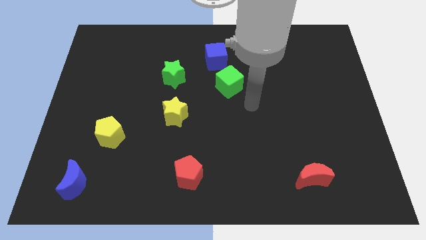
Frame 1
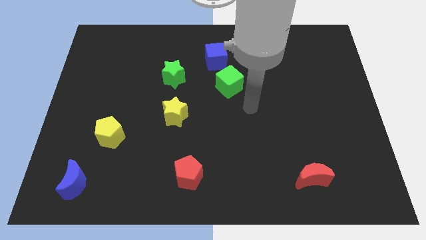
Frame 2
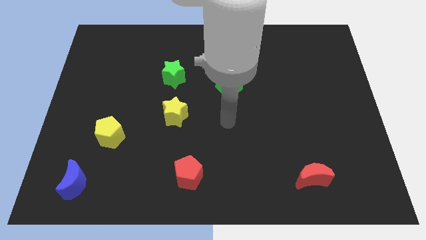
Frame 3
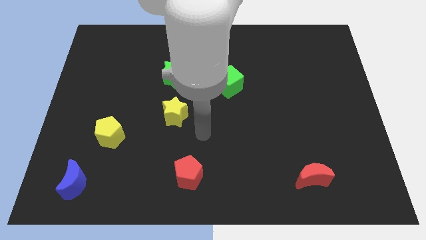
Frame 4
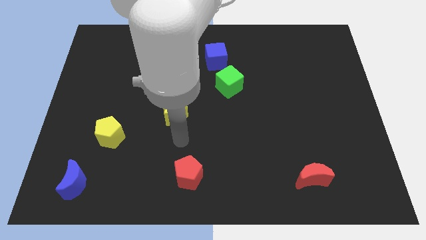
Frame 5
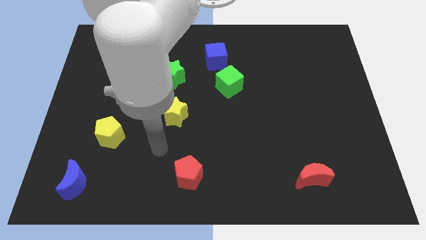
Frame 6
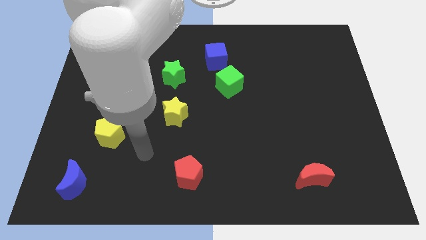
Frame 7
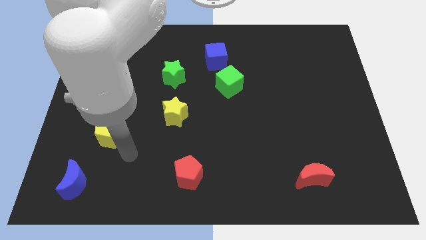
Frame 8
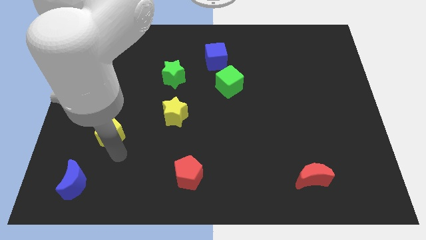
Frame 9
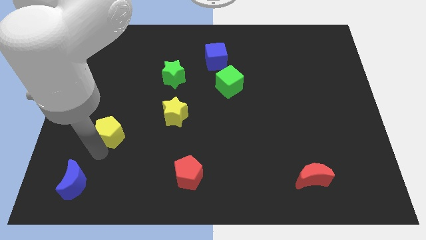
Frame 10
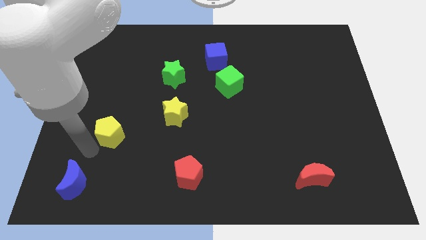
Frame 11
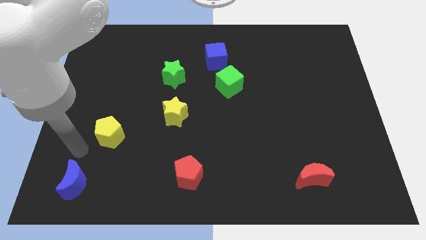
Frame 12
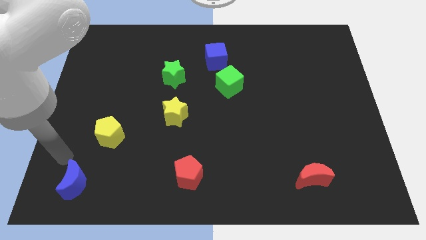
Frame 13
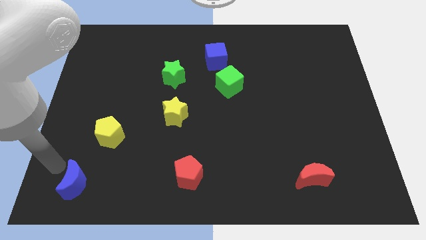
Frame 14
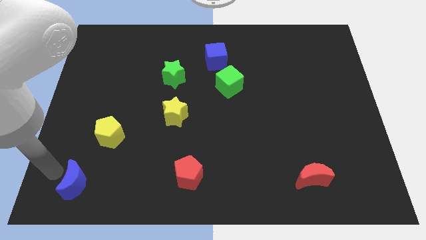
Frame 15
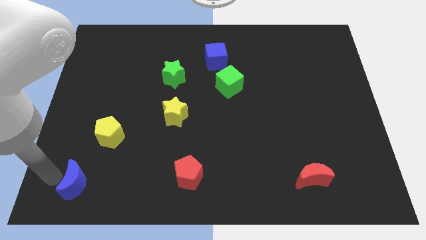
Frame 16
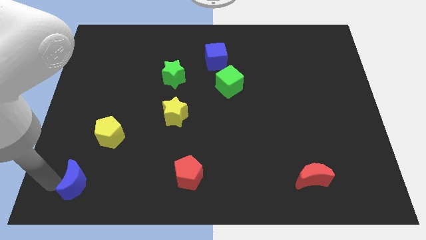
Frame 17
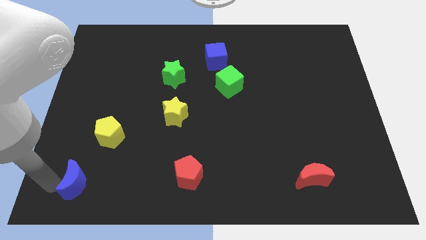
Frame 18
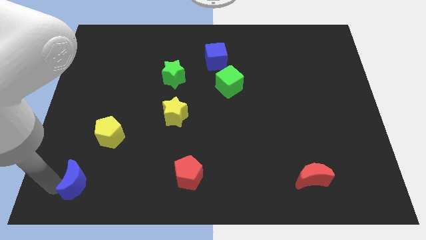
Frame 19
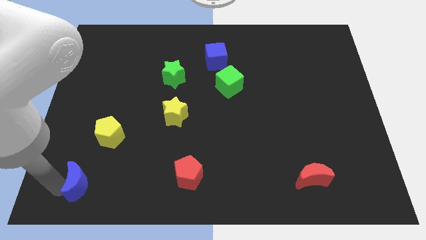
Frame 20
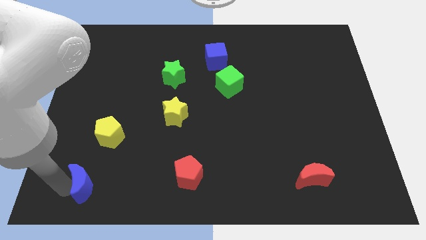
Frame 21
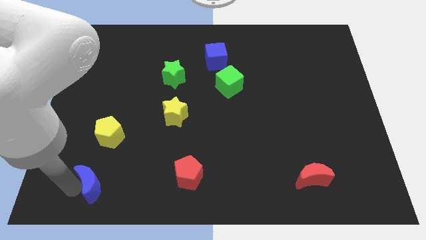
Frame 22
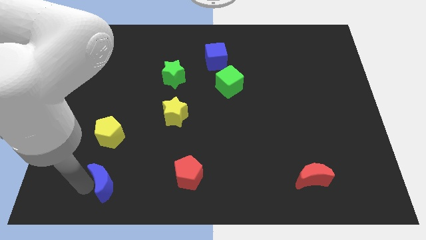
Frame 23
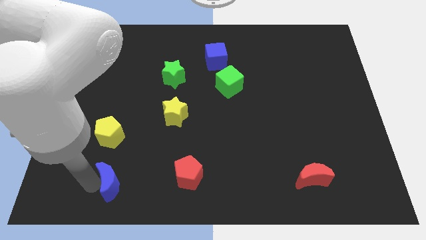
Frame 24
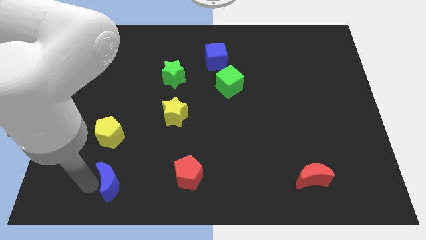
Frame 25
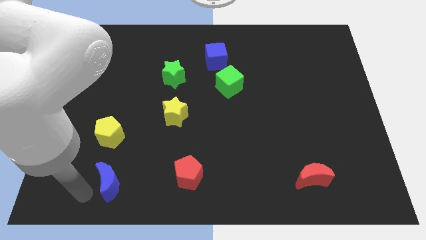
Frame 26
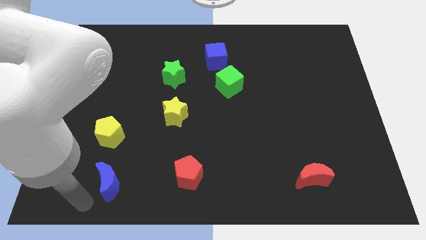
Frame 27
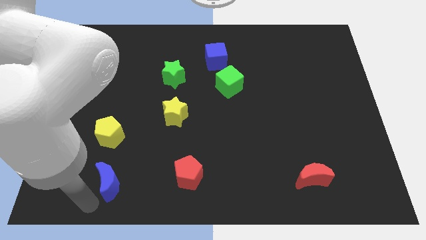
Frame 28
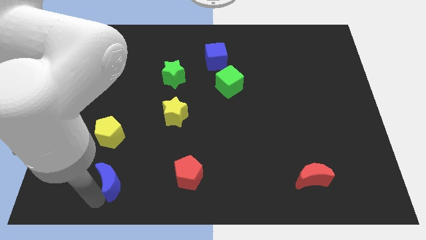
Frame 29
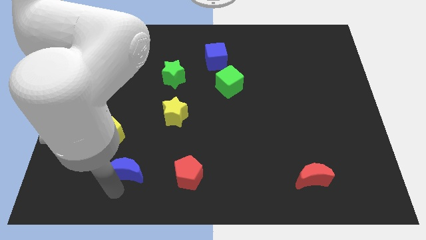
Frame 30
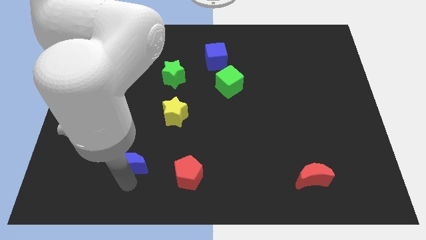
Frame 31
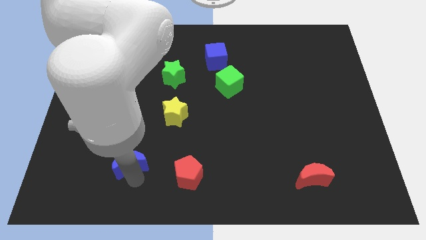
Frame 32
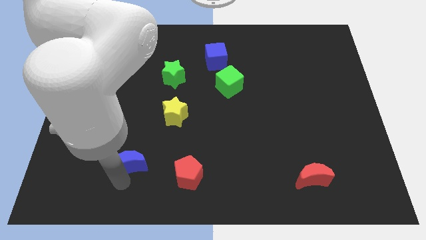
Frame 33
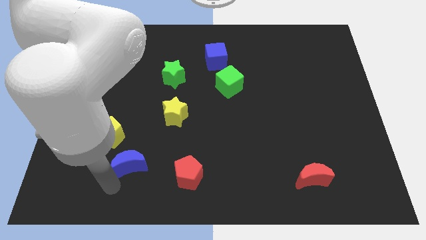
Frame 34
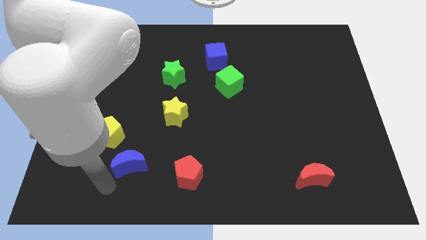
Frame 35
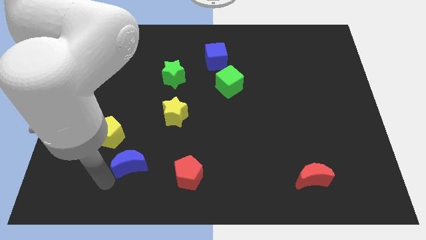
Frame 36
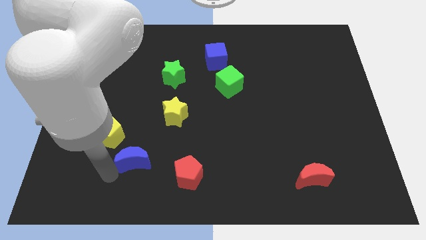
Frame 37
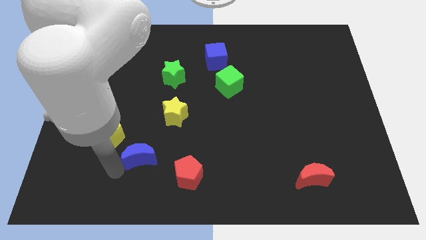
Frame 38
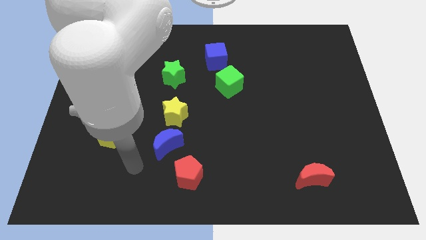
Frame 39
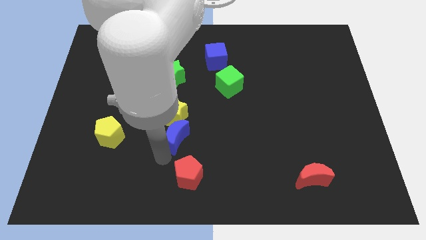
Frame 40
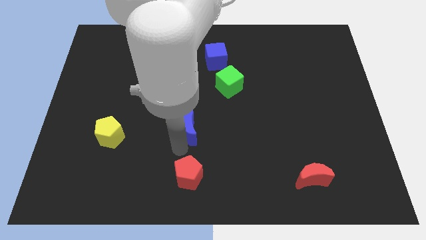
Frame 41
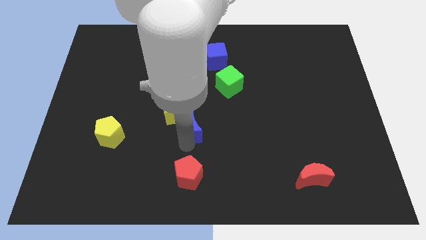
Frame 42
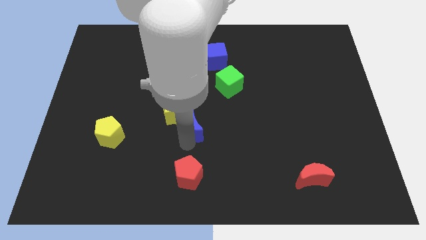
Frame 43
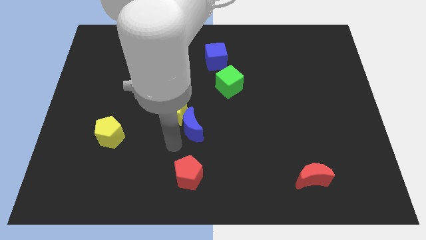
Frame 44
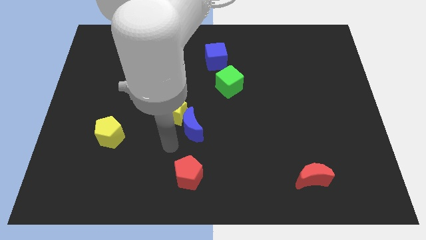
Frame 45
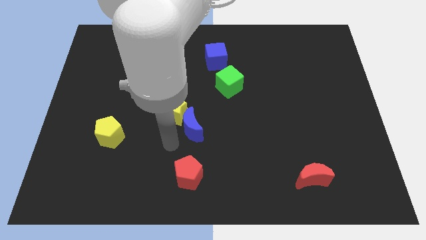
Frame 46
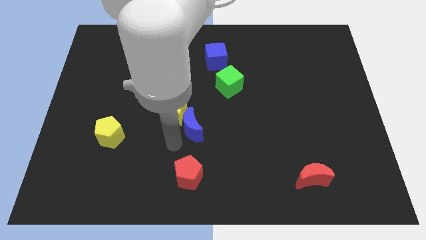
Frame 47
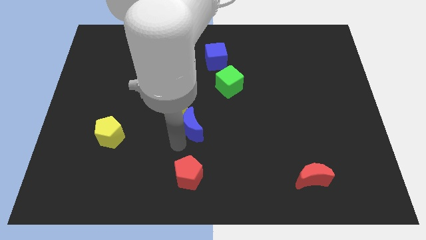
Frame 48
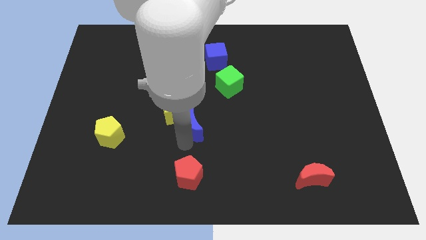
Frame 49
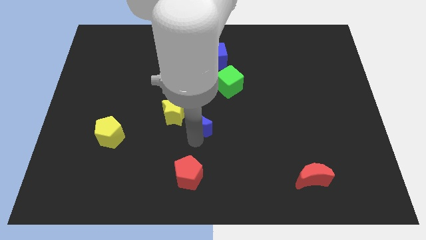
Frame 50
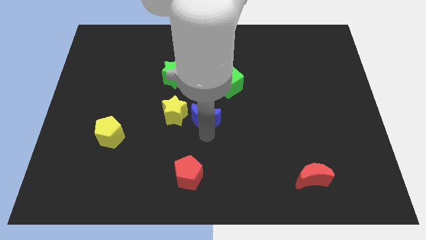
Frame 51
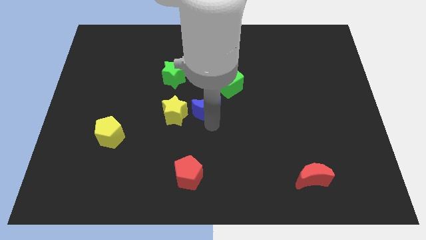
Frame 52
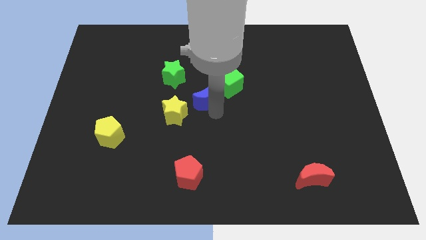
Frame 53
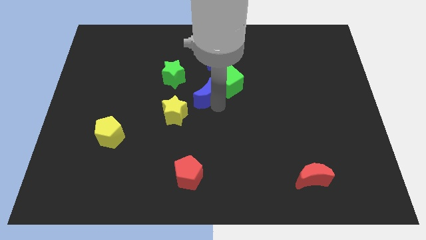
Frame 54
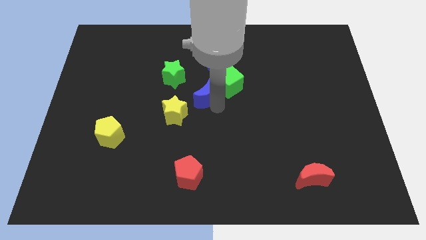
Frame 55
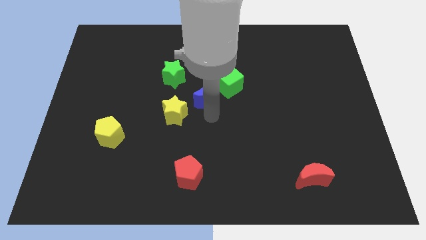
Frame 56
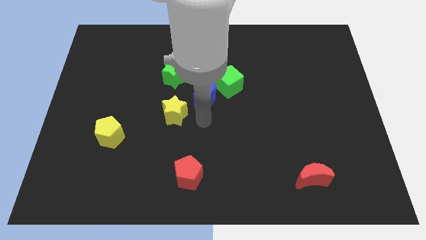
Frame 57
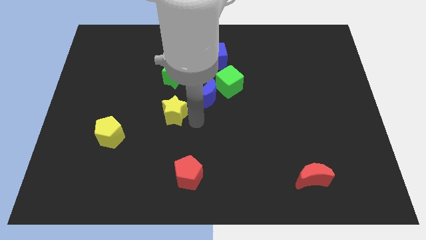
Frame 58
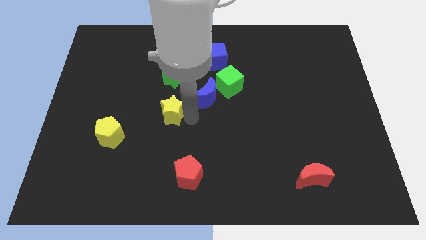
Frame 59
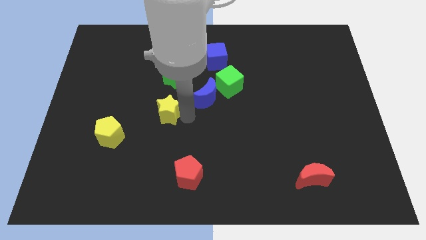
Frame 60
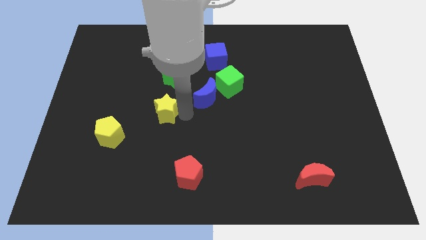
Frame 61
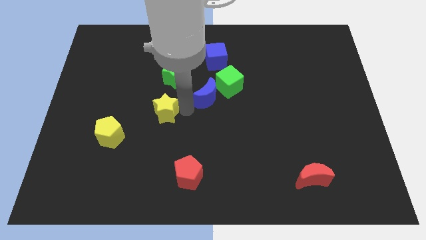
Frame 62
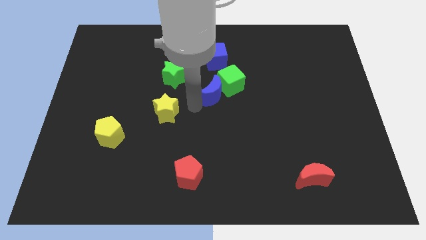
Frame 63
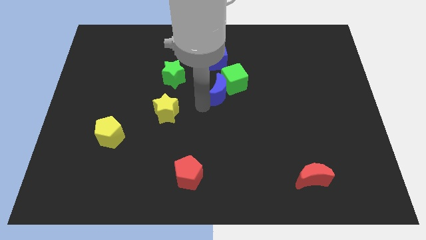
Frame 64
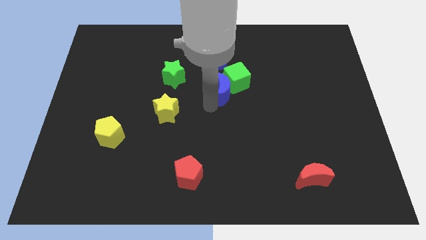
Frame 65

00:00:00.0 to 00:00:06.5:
move the blue moon close to the green cube

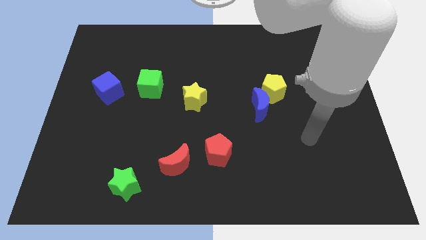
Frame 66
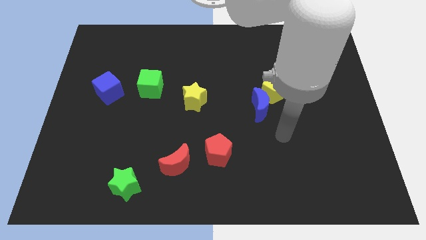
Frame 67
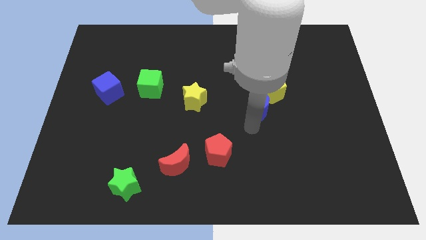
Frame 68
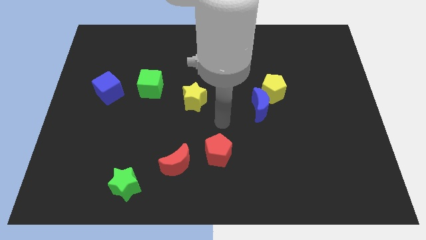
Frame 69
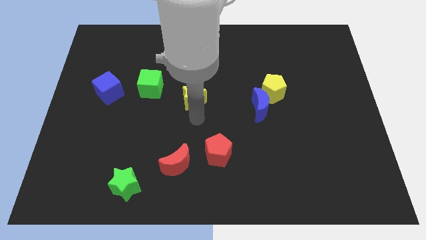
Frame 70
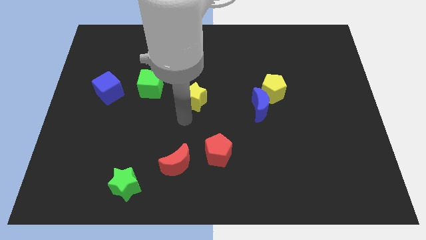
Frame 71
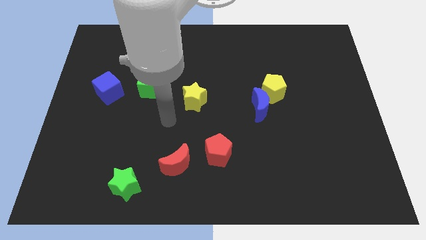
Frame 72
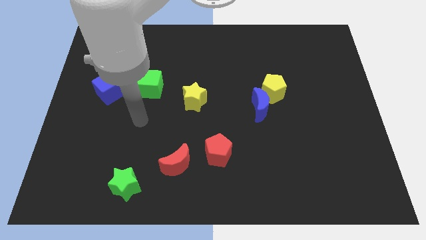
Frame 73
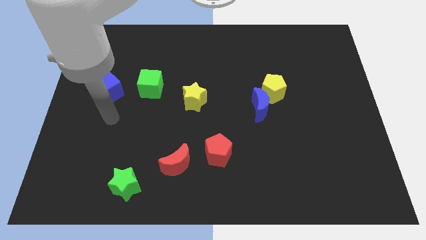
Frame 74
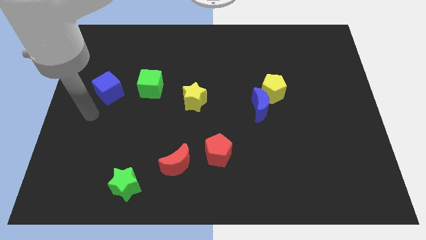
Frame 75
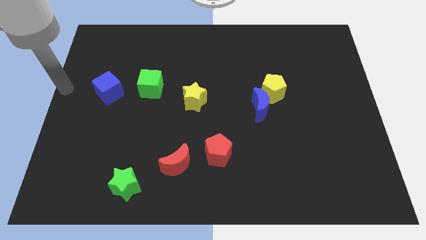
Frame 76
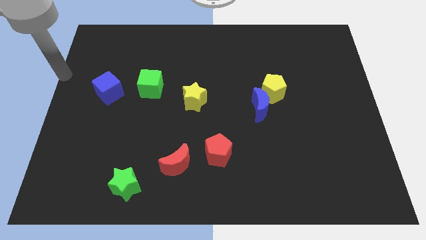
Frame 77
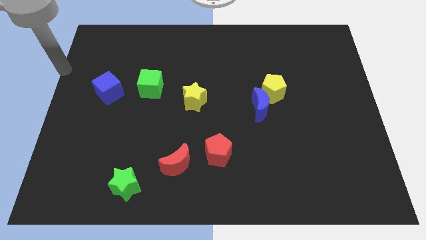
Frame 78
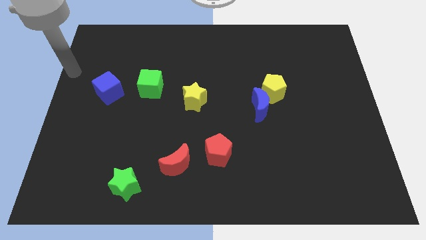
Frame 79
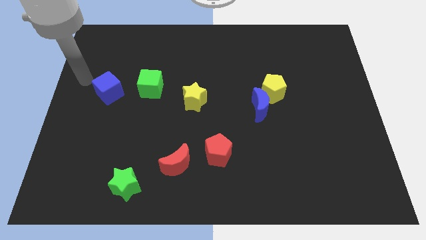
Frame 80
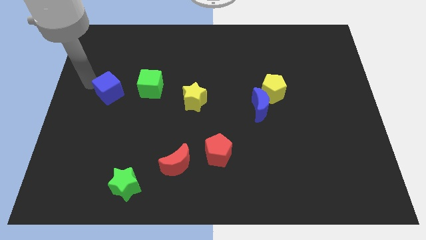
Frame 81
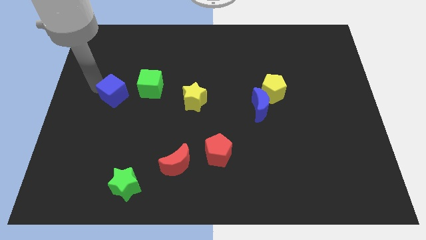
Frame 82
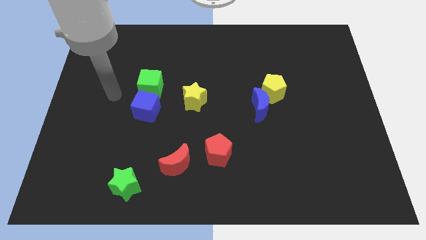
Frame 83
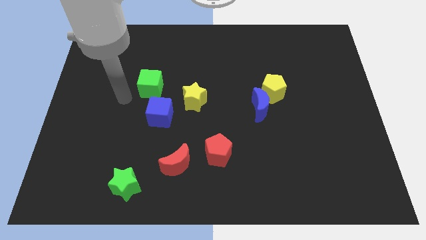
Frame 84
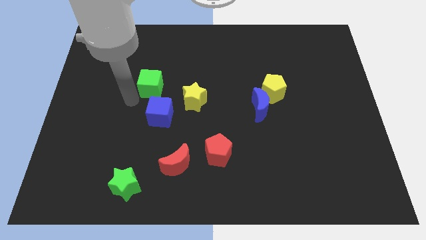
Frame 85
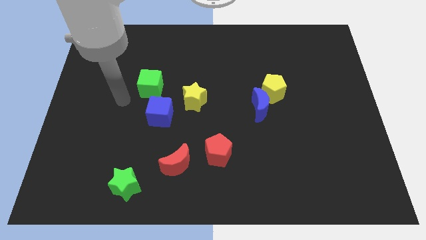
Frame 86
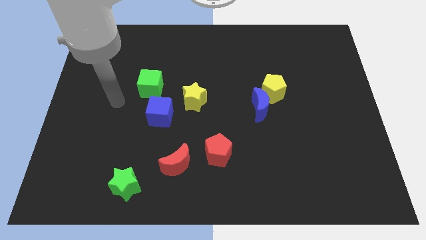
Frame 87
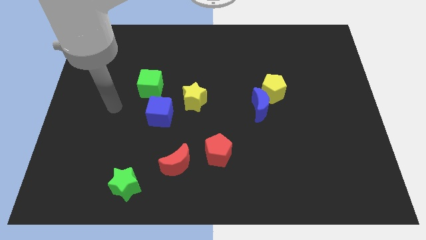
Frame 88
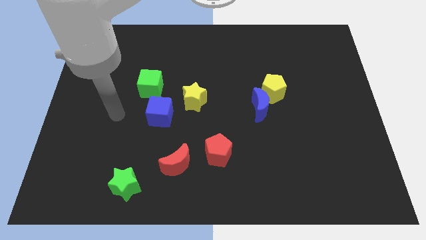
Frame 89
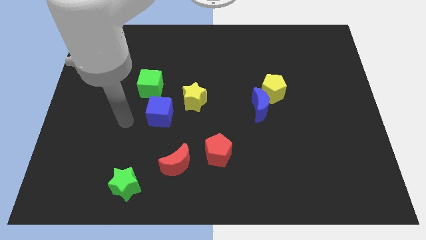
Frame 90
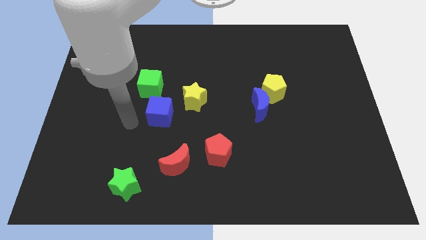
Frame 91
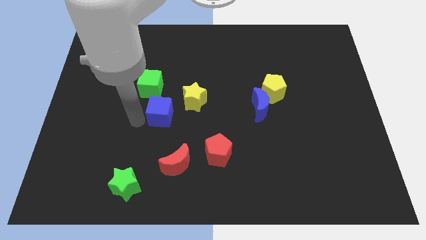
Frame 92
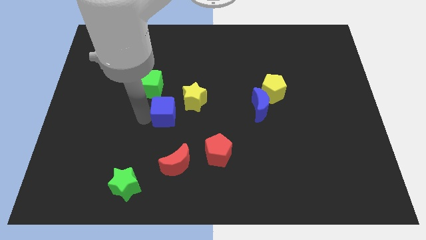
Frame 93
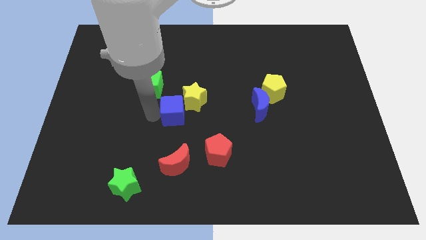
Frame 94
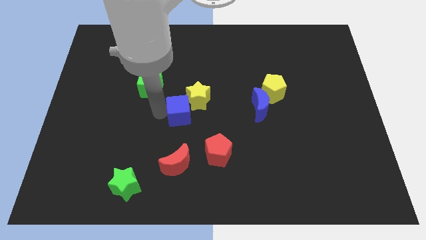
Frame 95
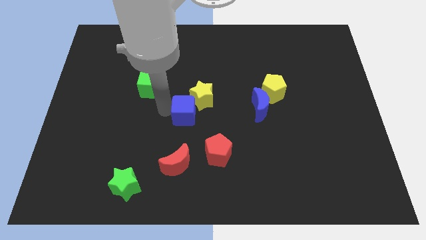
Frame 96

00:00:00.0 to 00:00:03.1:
put the blue cube to the yellow star
